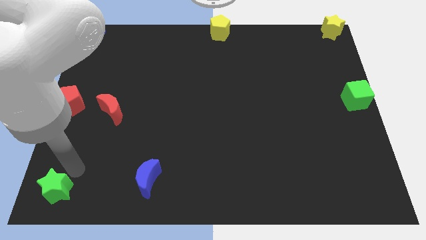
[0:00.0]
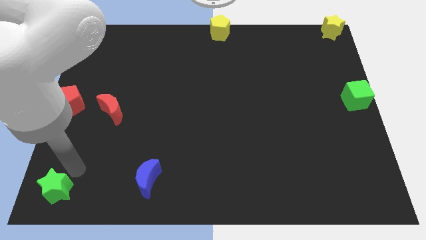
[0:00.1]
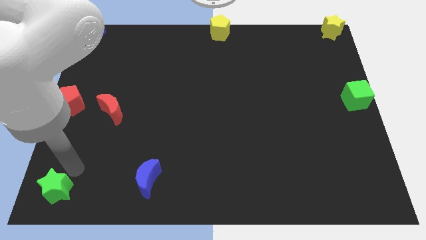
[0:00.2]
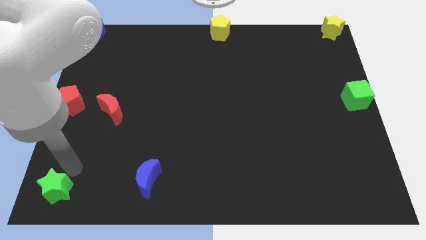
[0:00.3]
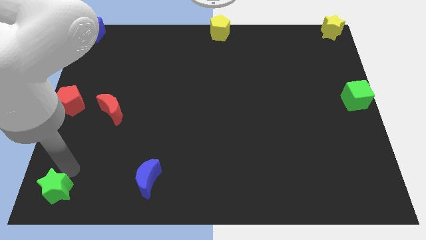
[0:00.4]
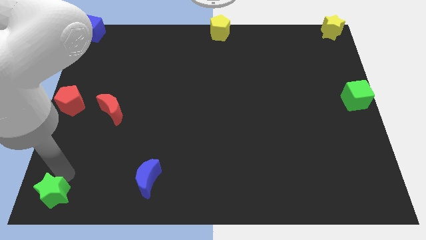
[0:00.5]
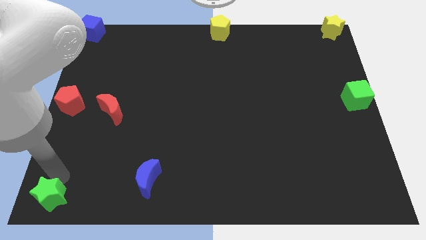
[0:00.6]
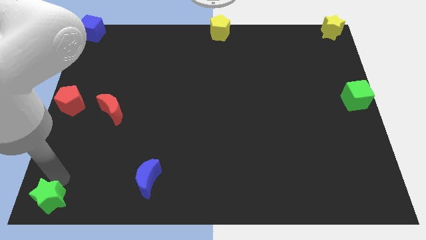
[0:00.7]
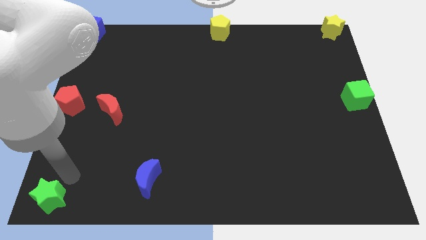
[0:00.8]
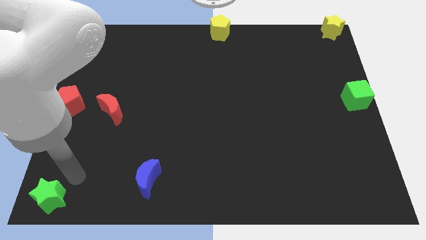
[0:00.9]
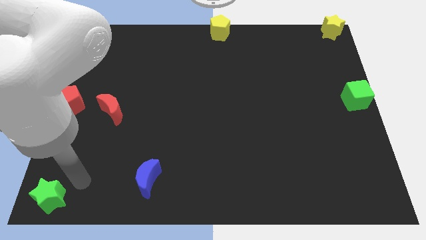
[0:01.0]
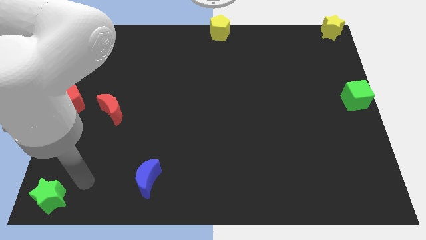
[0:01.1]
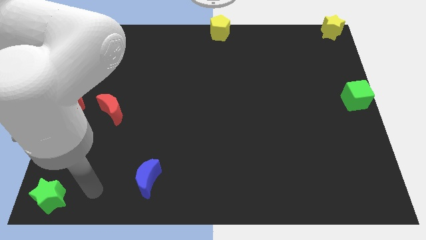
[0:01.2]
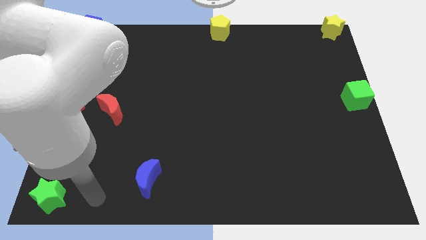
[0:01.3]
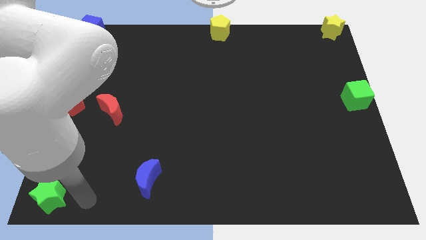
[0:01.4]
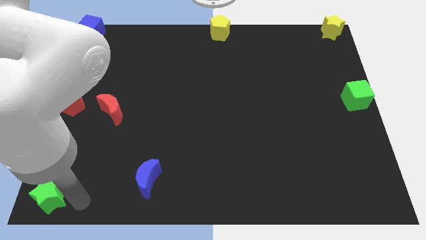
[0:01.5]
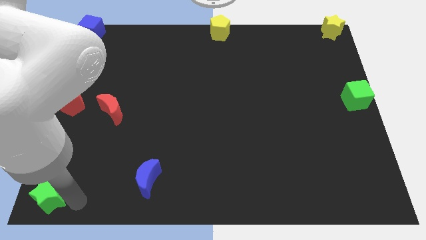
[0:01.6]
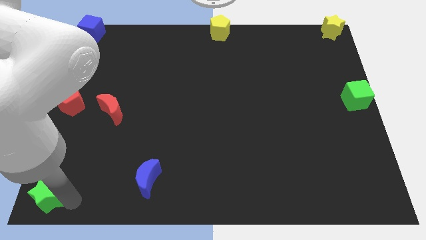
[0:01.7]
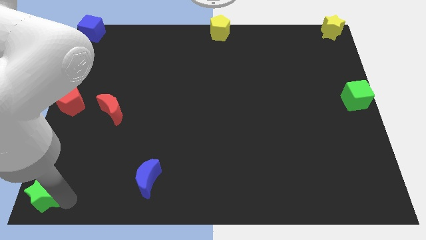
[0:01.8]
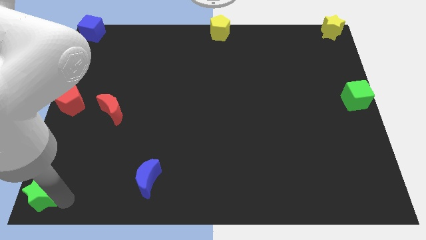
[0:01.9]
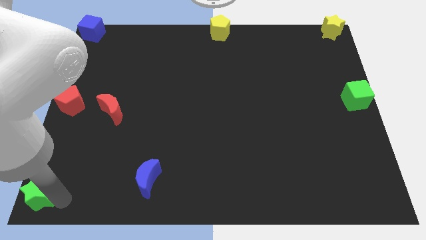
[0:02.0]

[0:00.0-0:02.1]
slide the green star at the bottom left side of the board

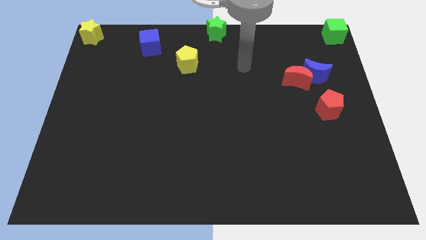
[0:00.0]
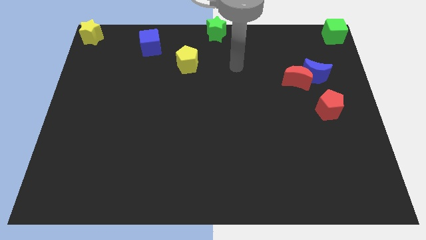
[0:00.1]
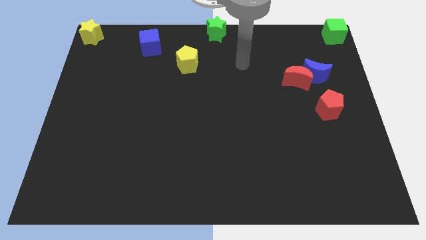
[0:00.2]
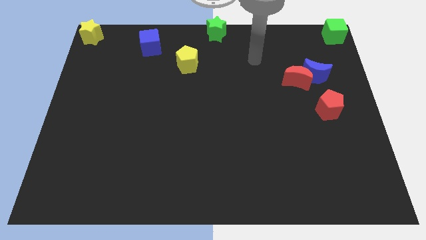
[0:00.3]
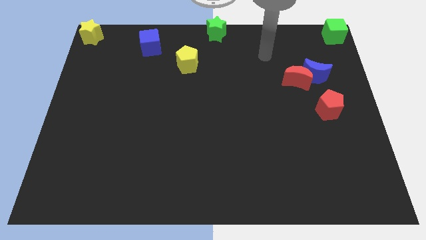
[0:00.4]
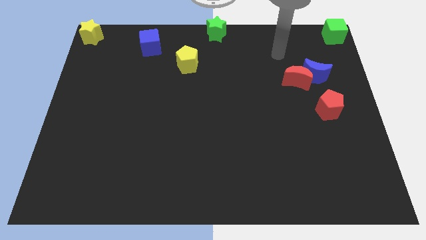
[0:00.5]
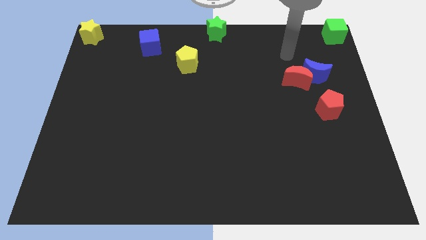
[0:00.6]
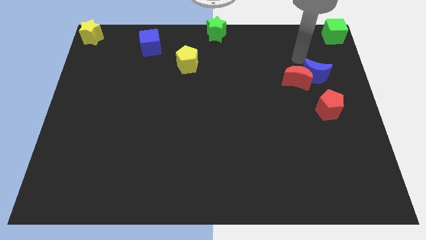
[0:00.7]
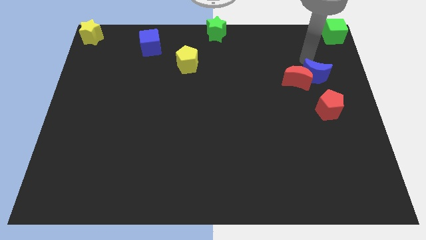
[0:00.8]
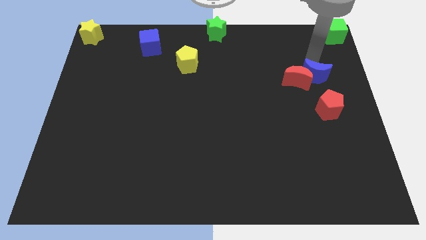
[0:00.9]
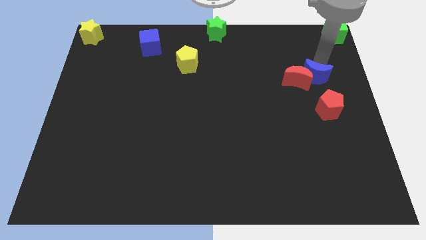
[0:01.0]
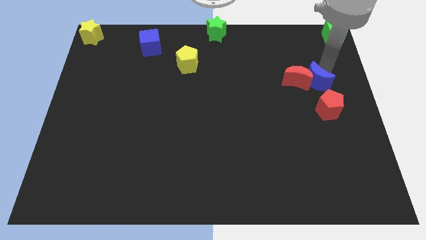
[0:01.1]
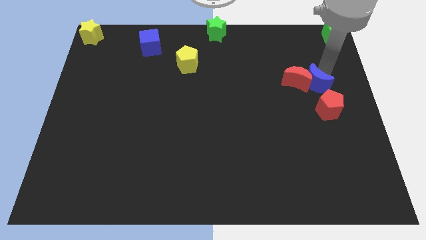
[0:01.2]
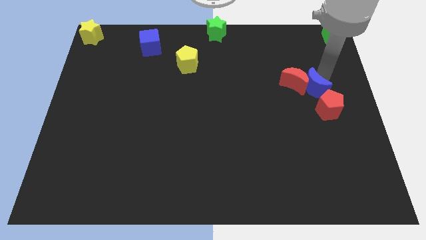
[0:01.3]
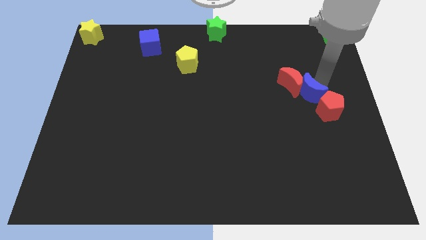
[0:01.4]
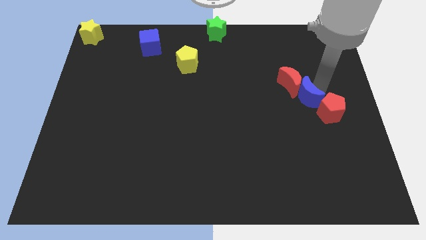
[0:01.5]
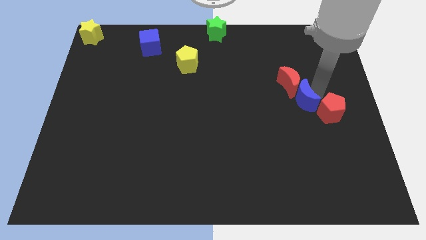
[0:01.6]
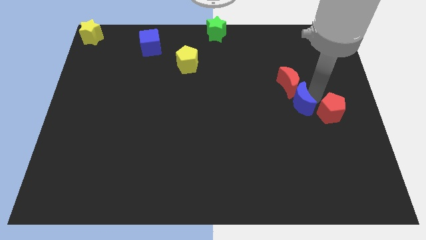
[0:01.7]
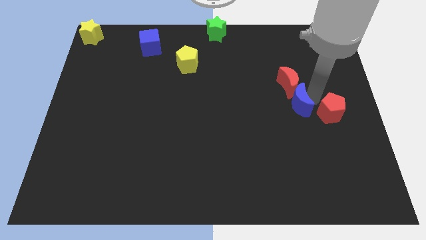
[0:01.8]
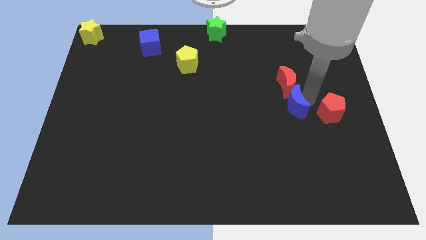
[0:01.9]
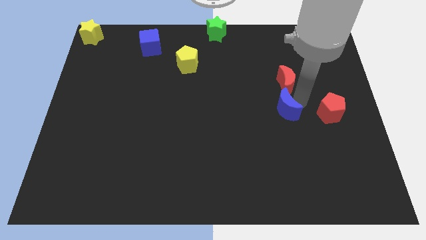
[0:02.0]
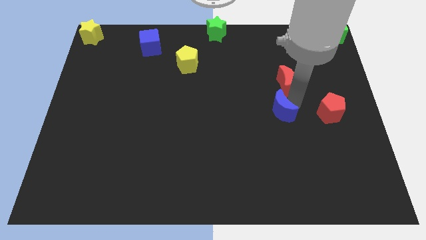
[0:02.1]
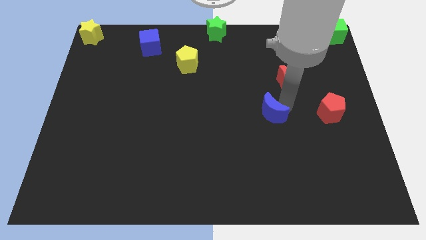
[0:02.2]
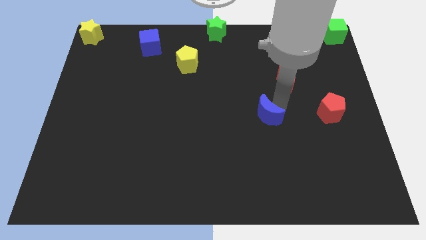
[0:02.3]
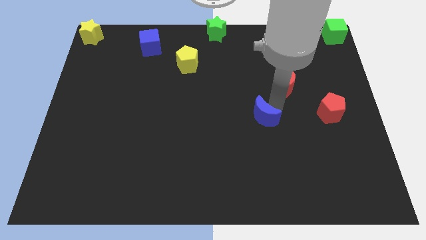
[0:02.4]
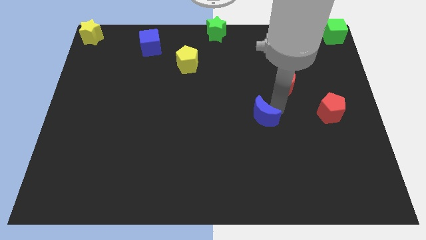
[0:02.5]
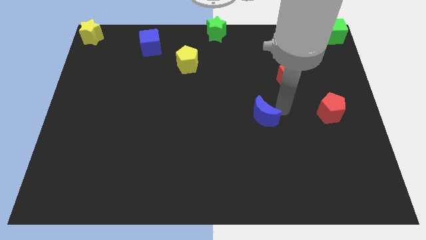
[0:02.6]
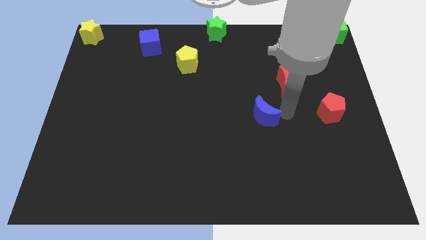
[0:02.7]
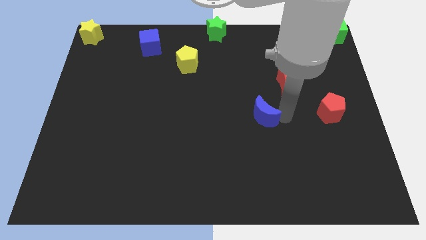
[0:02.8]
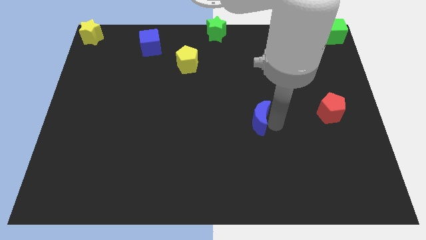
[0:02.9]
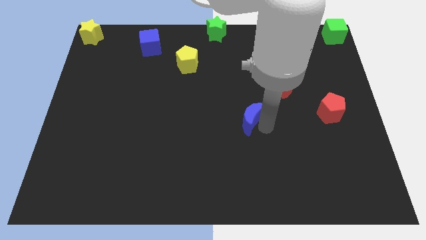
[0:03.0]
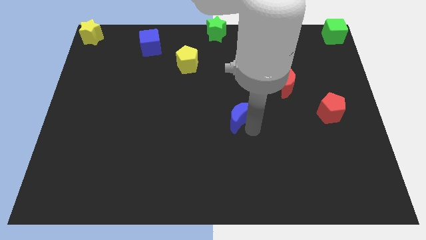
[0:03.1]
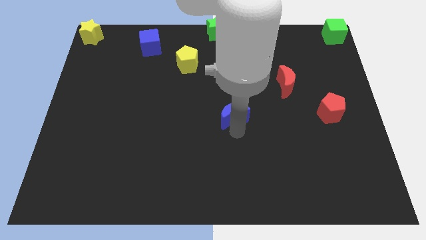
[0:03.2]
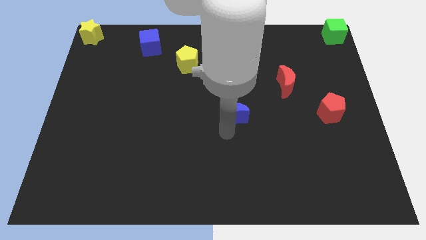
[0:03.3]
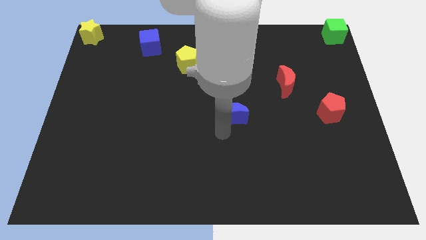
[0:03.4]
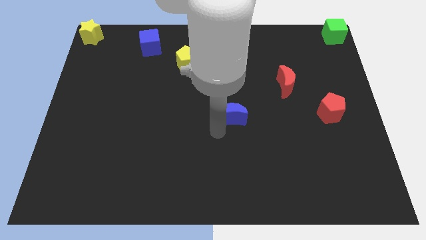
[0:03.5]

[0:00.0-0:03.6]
move blue crescent to the center

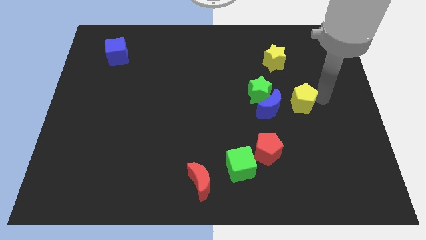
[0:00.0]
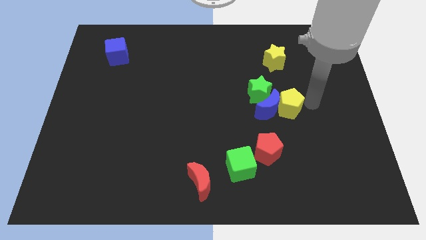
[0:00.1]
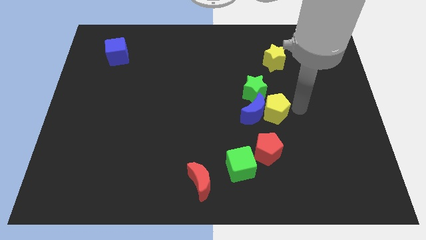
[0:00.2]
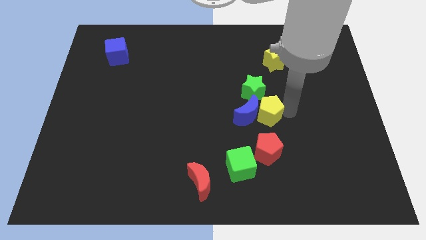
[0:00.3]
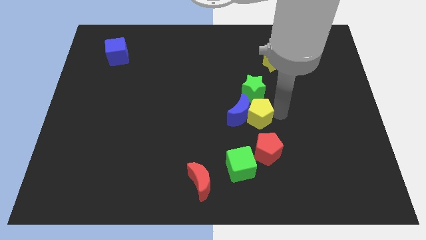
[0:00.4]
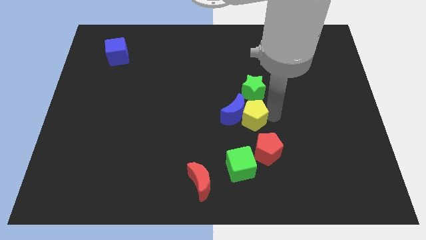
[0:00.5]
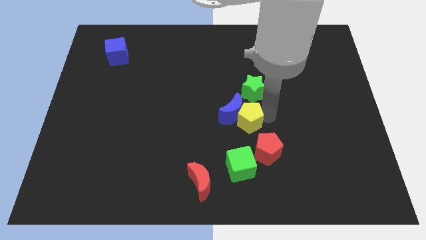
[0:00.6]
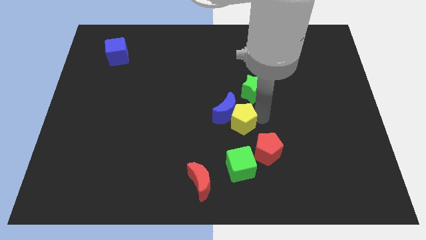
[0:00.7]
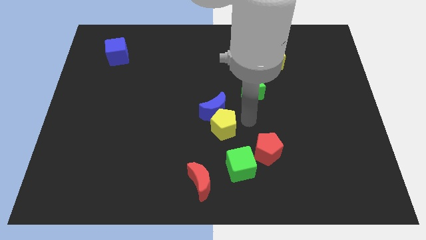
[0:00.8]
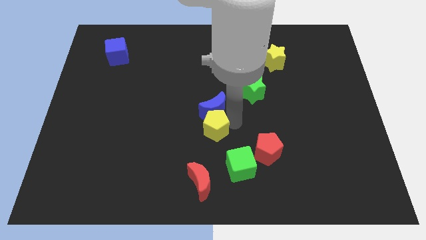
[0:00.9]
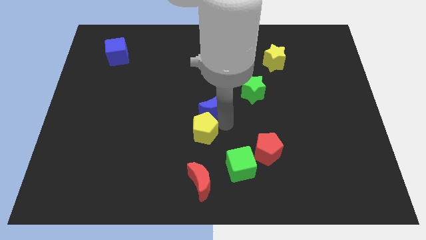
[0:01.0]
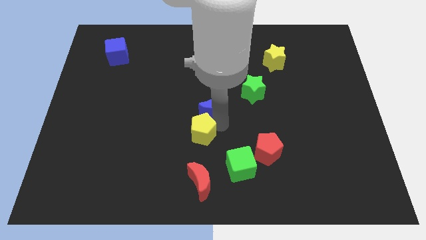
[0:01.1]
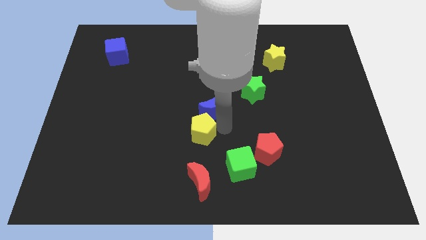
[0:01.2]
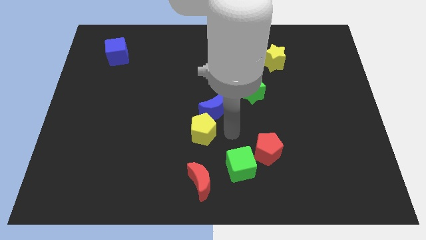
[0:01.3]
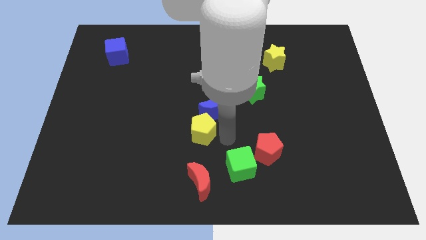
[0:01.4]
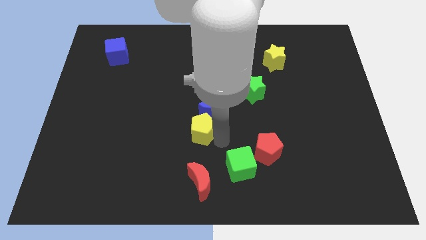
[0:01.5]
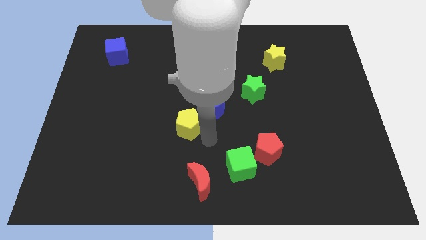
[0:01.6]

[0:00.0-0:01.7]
push the yellow block to the center of the board

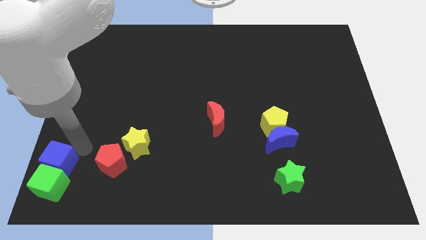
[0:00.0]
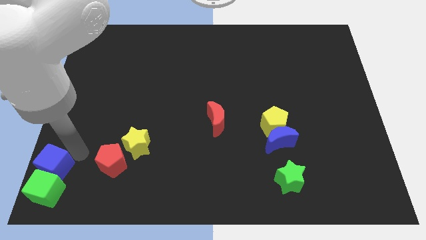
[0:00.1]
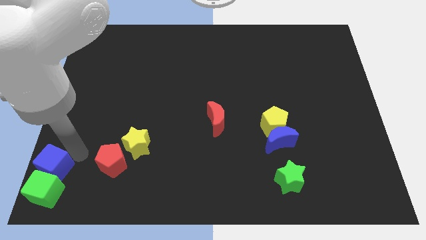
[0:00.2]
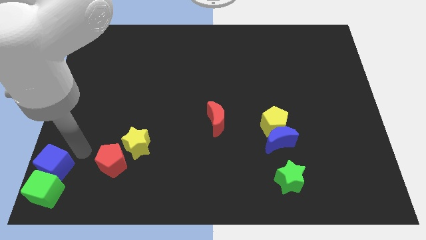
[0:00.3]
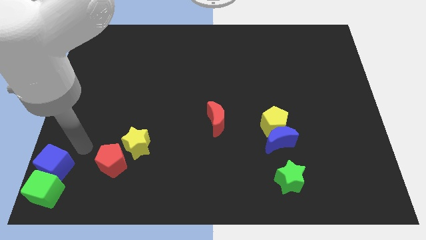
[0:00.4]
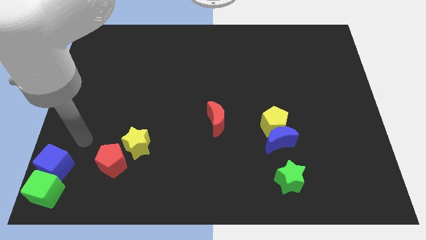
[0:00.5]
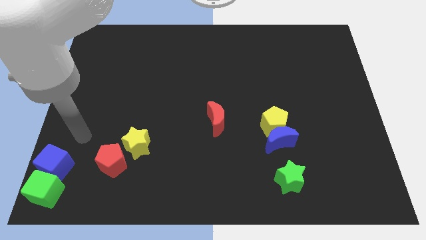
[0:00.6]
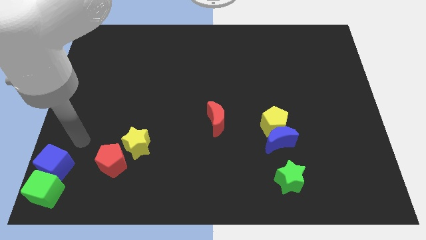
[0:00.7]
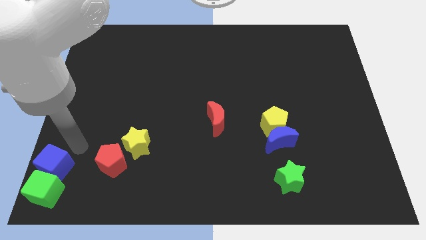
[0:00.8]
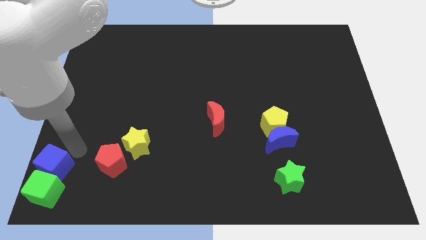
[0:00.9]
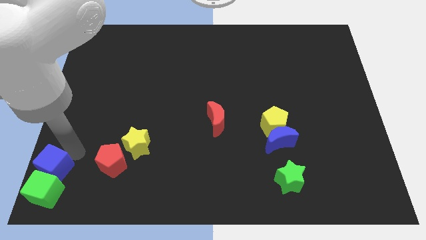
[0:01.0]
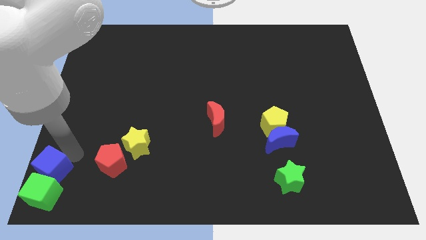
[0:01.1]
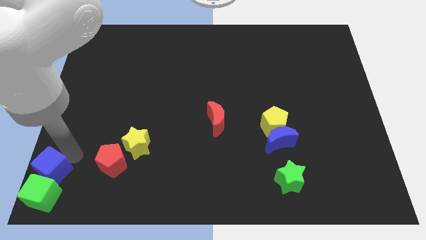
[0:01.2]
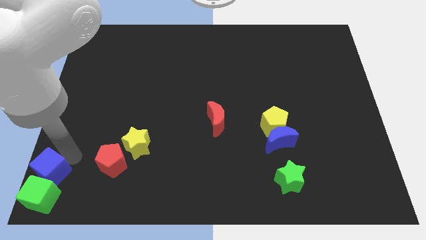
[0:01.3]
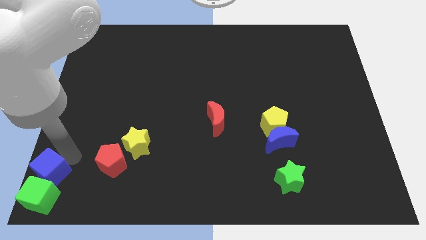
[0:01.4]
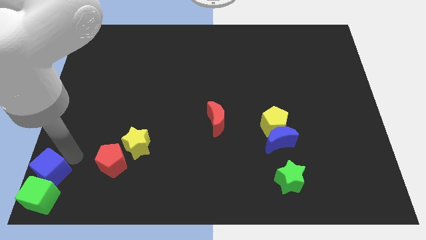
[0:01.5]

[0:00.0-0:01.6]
push the both cubes to the bottom left
